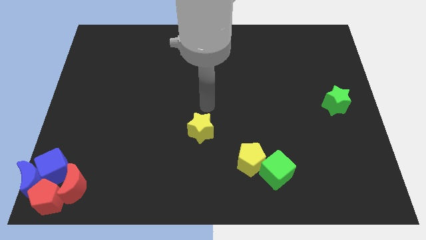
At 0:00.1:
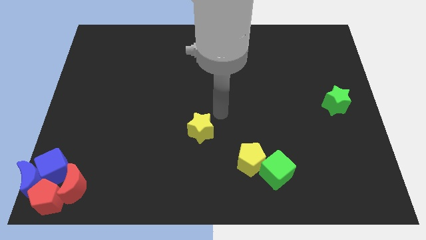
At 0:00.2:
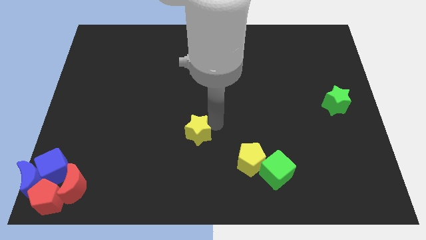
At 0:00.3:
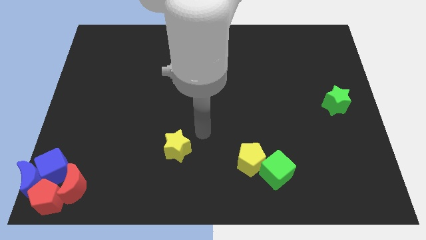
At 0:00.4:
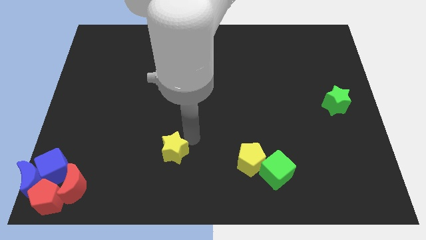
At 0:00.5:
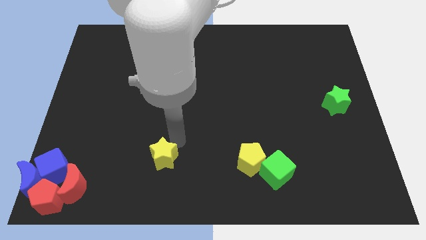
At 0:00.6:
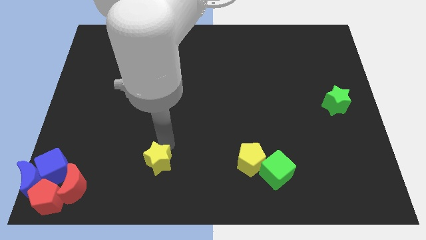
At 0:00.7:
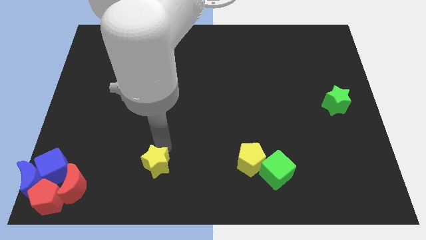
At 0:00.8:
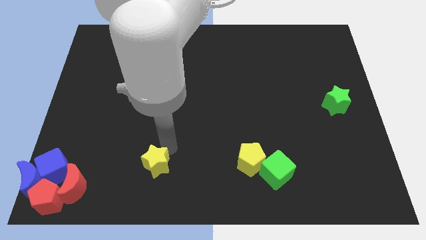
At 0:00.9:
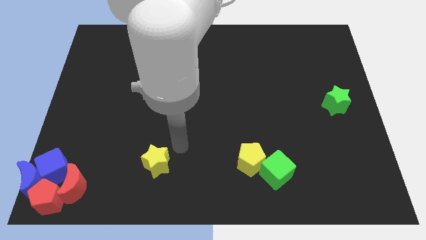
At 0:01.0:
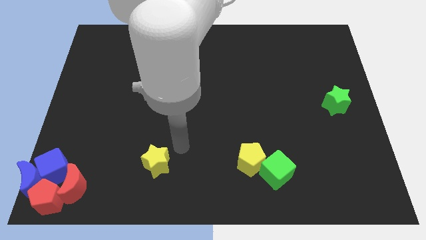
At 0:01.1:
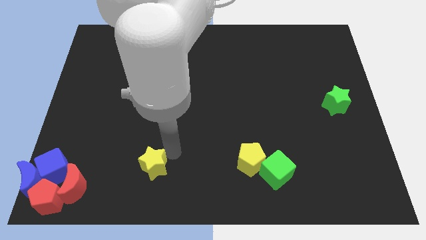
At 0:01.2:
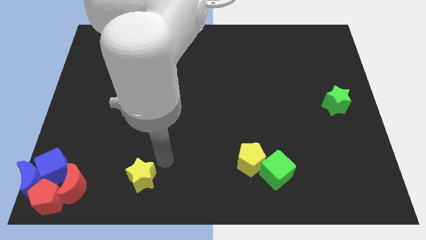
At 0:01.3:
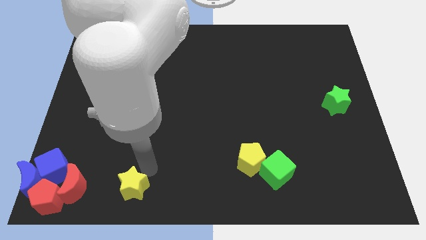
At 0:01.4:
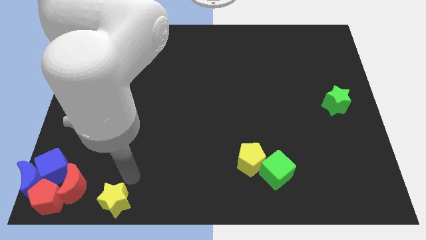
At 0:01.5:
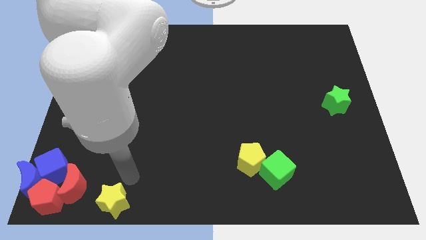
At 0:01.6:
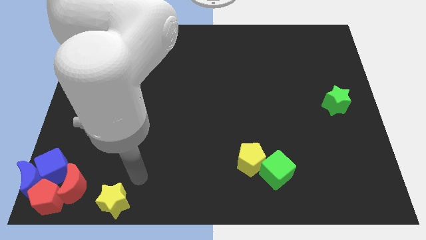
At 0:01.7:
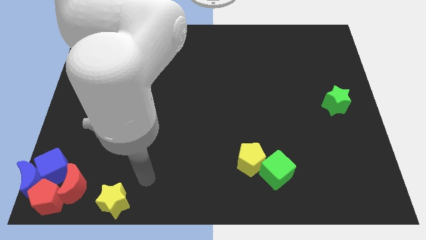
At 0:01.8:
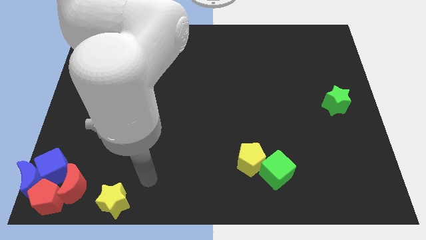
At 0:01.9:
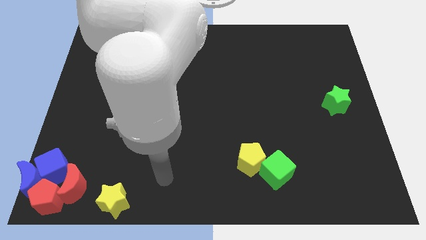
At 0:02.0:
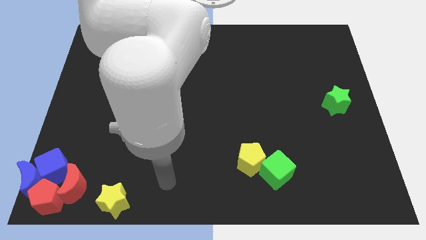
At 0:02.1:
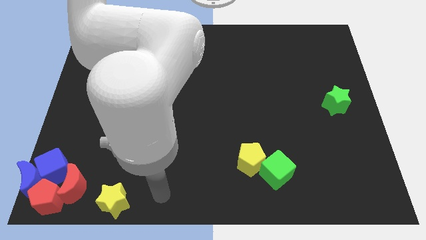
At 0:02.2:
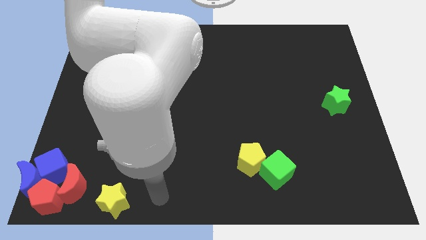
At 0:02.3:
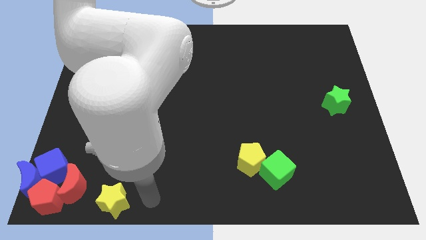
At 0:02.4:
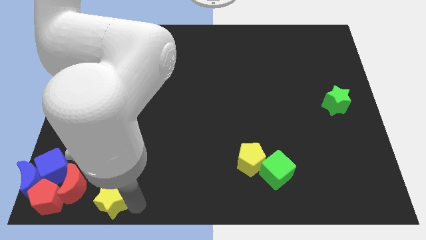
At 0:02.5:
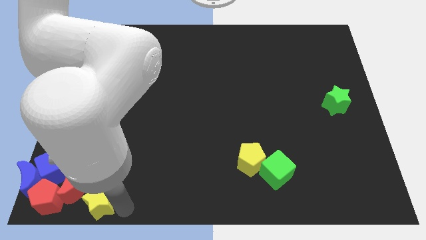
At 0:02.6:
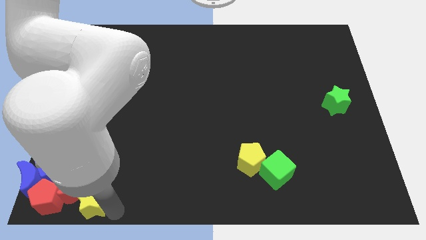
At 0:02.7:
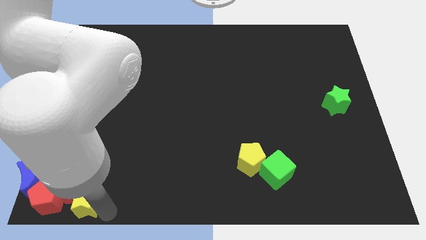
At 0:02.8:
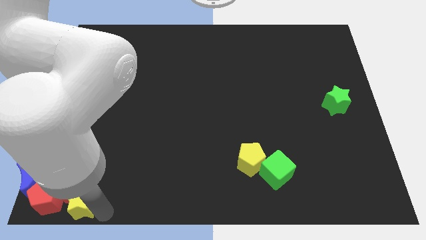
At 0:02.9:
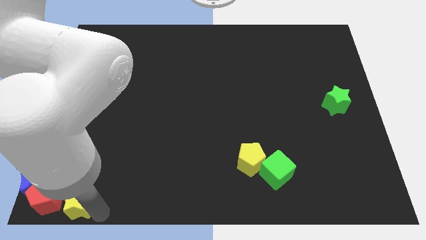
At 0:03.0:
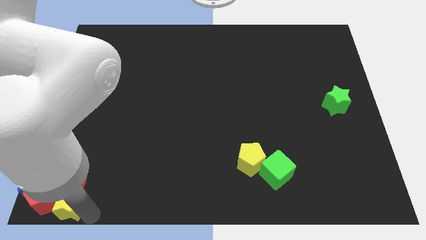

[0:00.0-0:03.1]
slide the yellow star into the group of blocks

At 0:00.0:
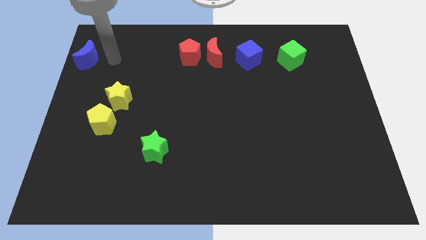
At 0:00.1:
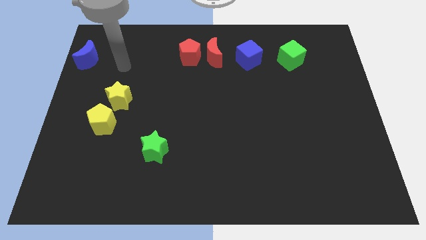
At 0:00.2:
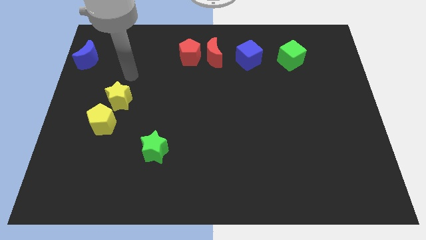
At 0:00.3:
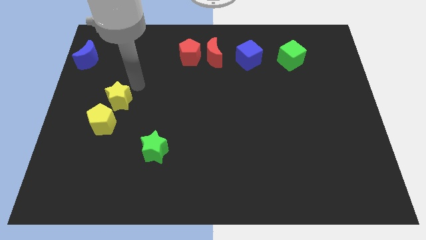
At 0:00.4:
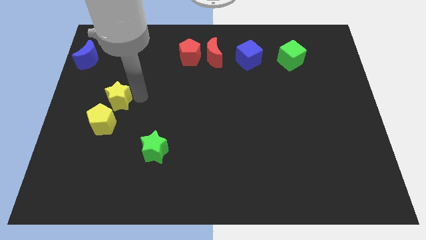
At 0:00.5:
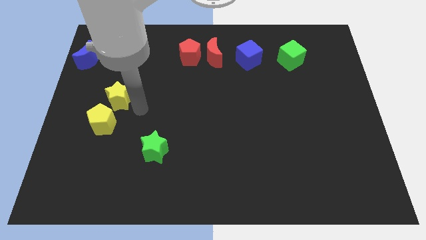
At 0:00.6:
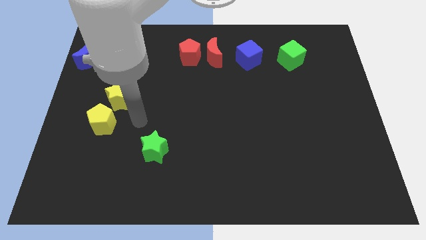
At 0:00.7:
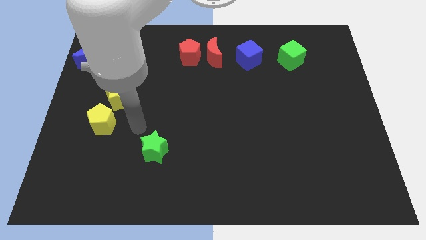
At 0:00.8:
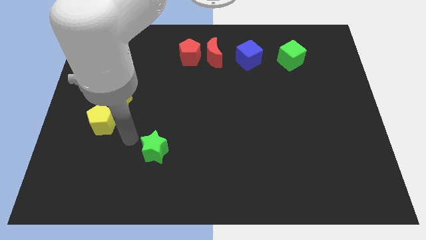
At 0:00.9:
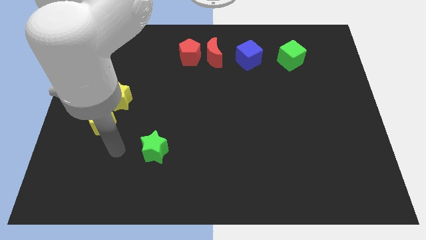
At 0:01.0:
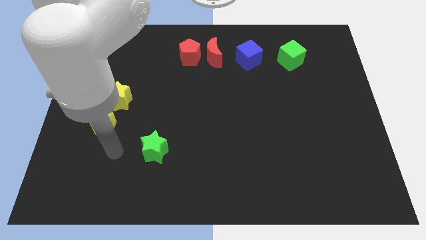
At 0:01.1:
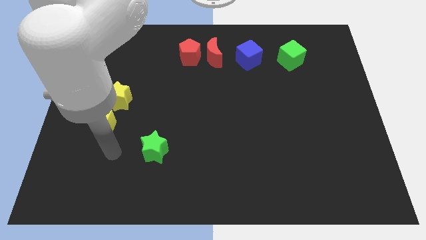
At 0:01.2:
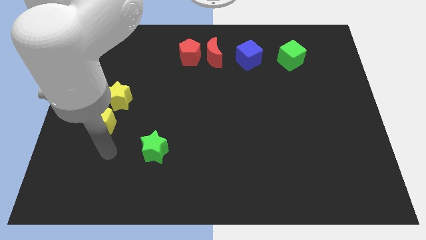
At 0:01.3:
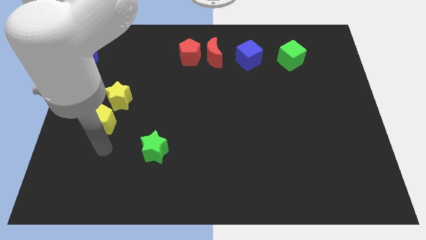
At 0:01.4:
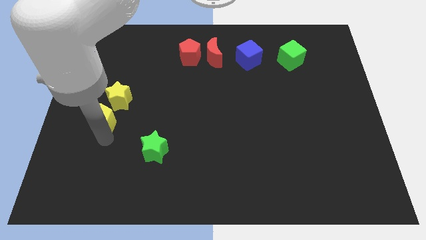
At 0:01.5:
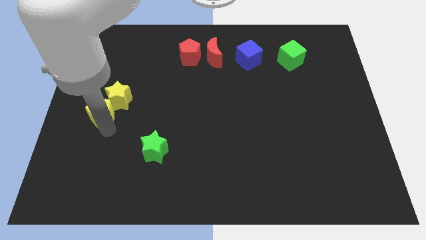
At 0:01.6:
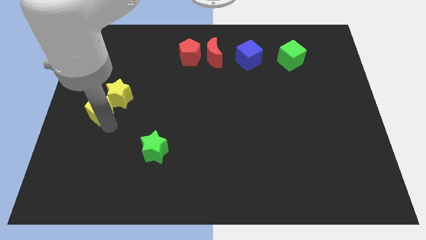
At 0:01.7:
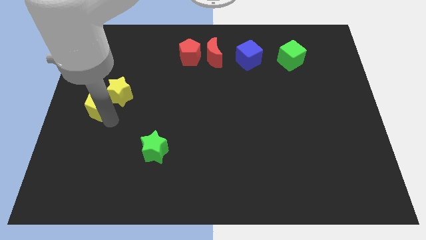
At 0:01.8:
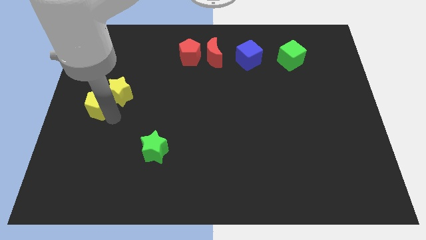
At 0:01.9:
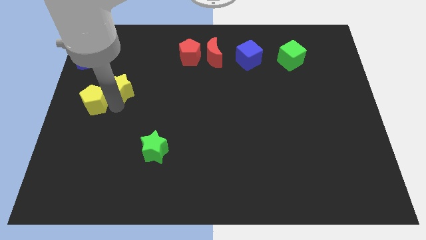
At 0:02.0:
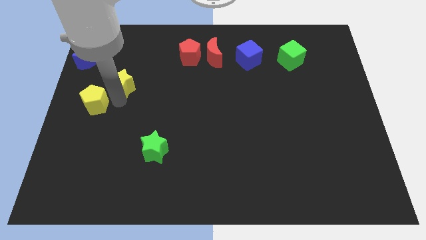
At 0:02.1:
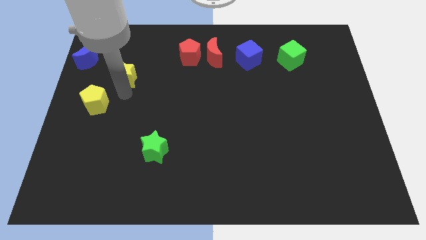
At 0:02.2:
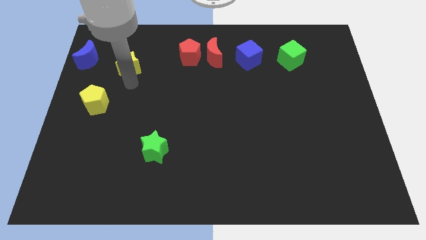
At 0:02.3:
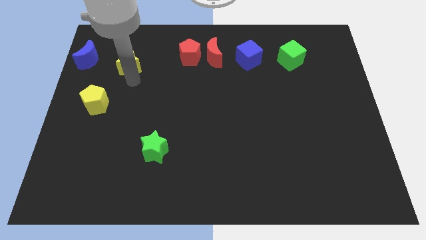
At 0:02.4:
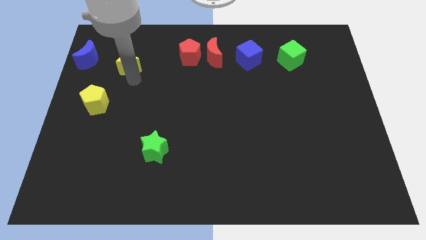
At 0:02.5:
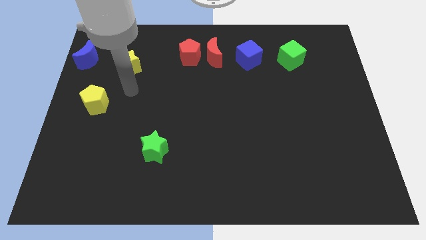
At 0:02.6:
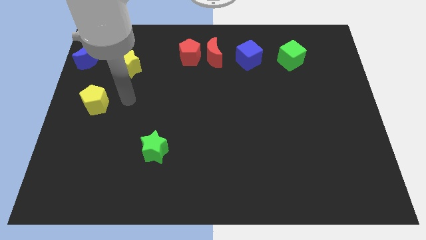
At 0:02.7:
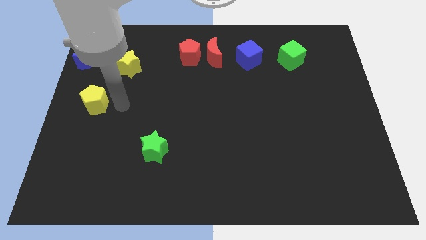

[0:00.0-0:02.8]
separate yellow pentagon from yellow star

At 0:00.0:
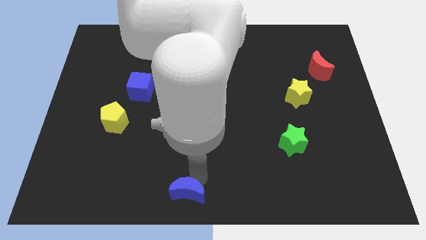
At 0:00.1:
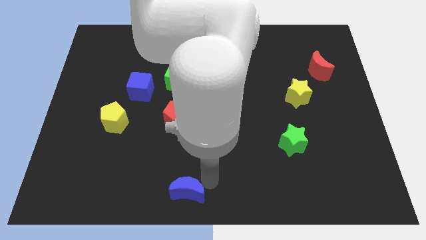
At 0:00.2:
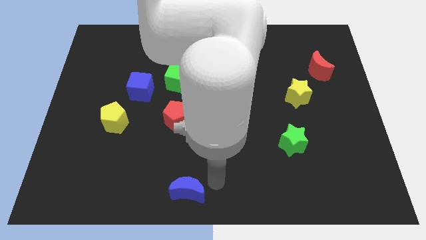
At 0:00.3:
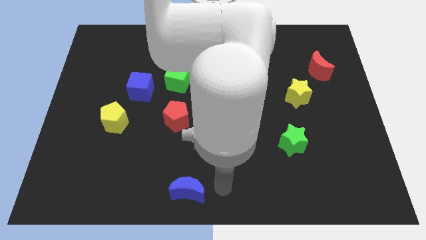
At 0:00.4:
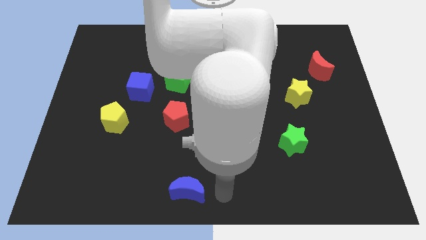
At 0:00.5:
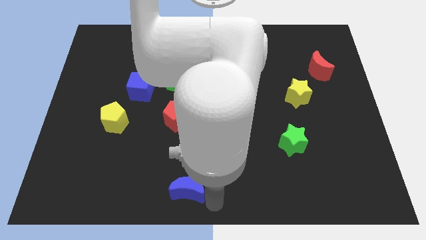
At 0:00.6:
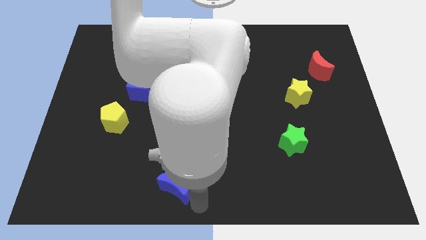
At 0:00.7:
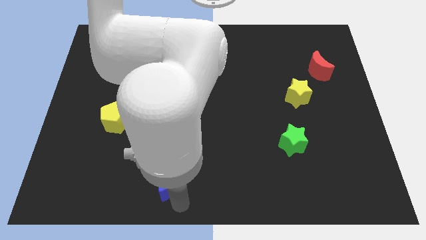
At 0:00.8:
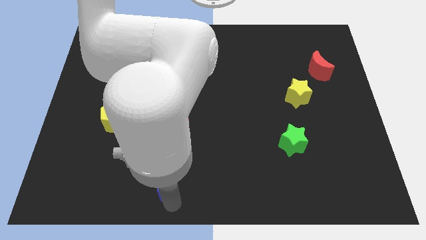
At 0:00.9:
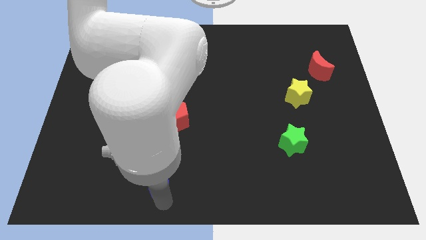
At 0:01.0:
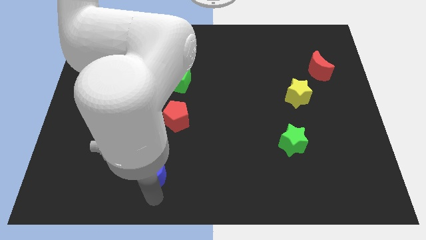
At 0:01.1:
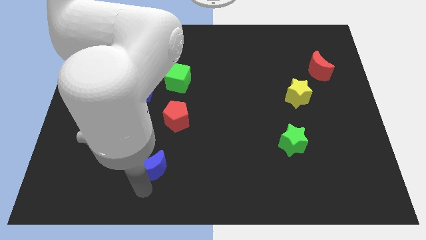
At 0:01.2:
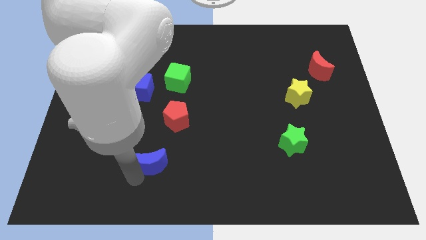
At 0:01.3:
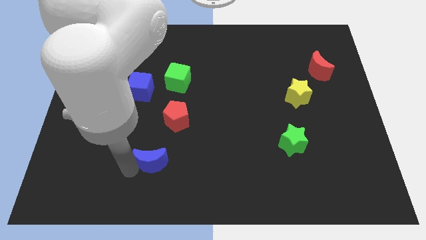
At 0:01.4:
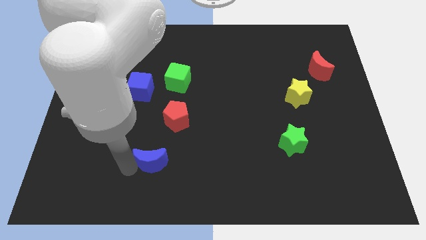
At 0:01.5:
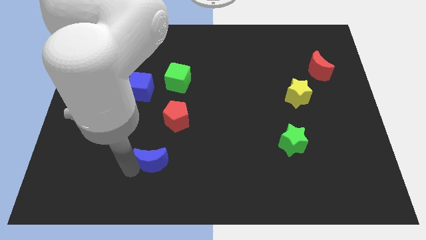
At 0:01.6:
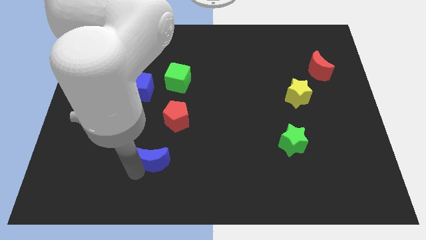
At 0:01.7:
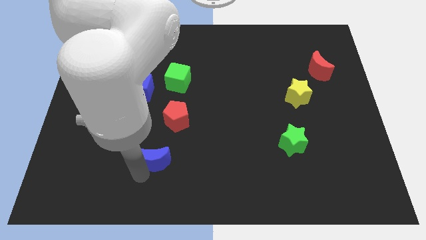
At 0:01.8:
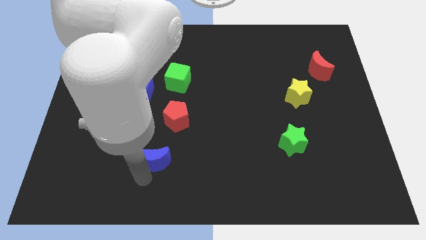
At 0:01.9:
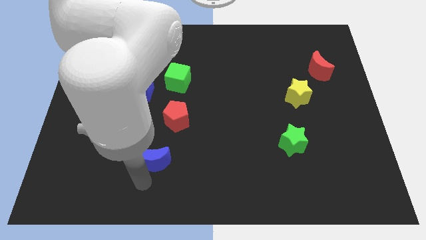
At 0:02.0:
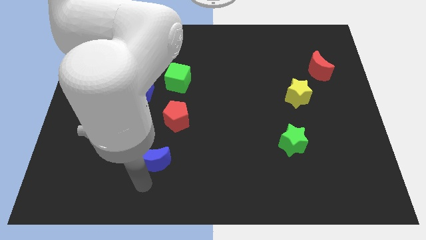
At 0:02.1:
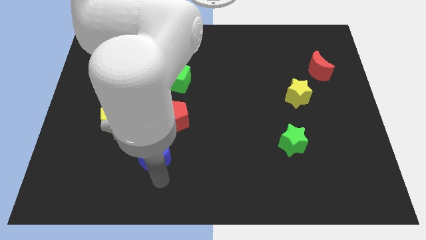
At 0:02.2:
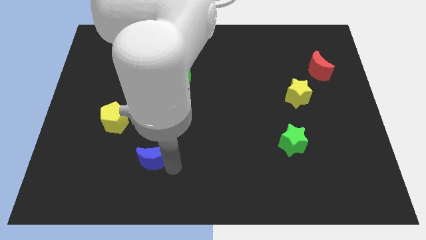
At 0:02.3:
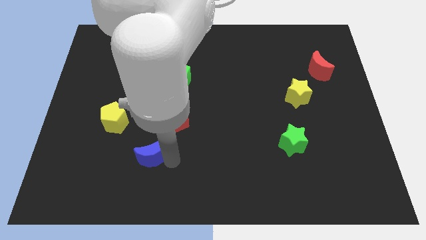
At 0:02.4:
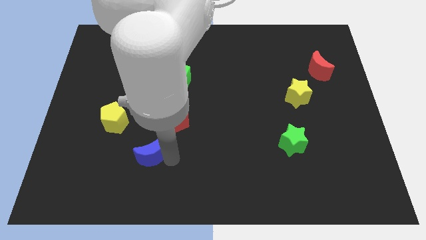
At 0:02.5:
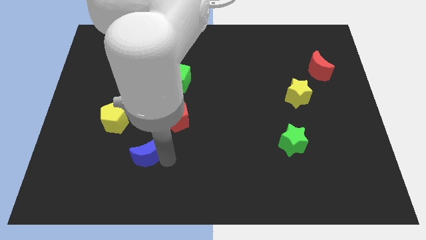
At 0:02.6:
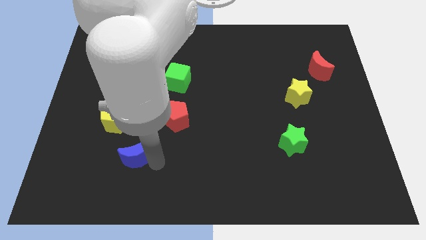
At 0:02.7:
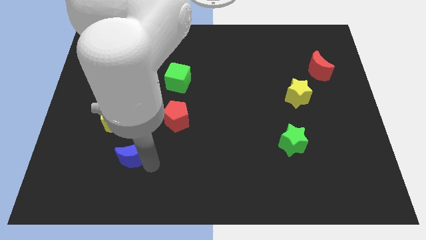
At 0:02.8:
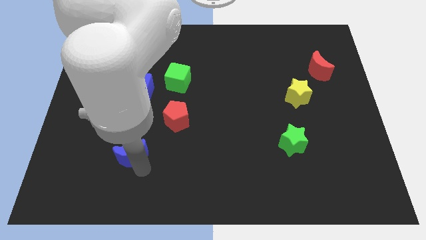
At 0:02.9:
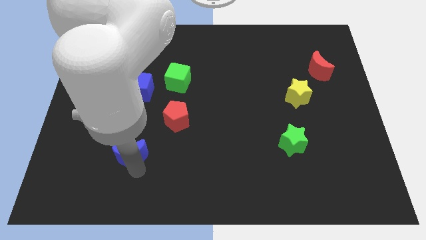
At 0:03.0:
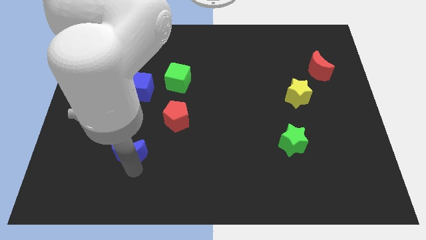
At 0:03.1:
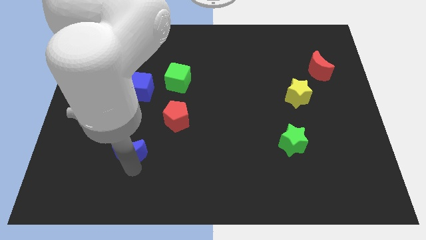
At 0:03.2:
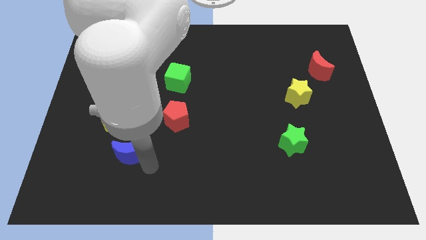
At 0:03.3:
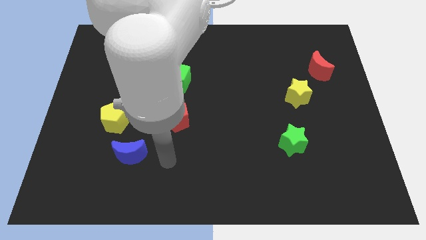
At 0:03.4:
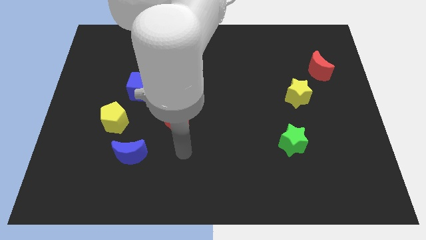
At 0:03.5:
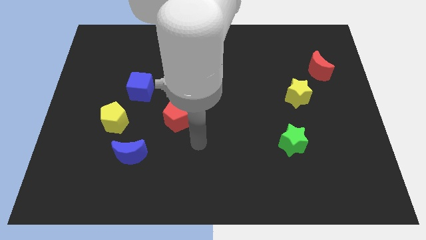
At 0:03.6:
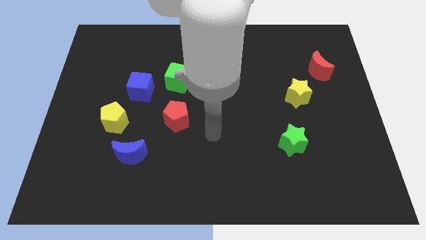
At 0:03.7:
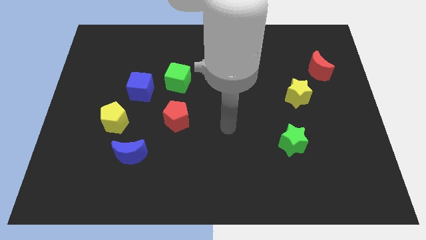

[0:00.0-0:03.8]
drag the blue crescent to the bottom of the blue cube
